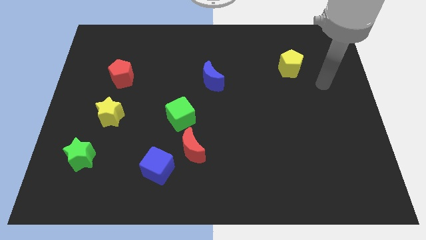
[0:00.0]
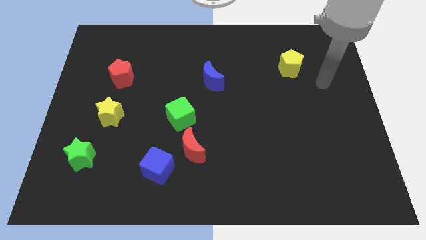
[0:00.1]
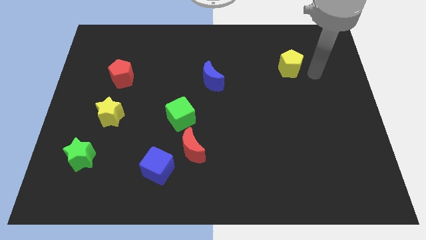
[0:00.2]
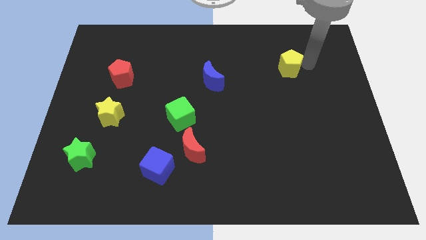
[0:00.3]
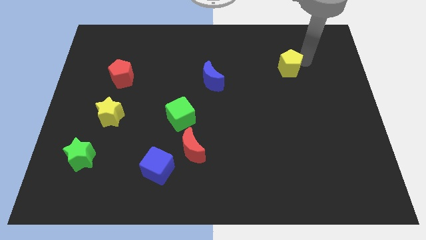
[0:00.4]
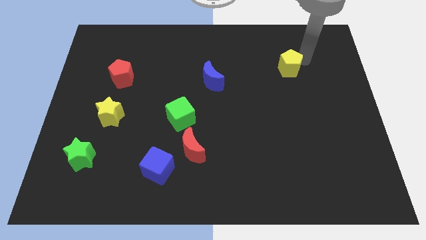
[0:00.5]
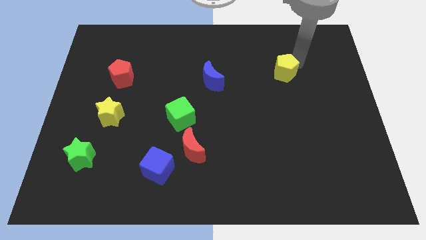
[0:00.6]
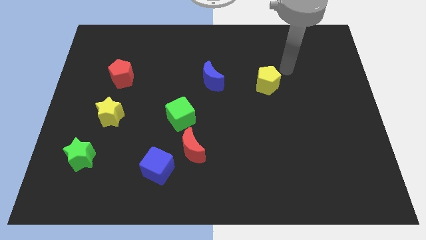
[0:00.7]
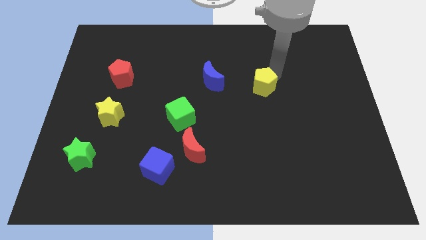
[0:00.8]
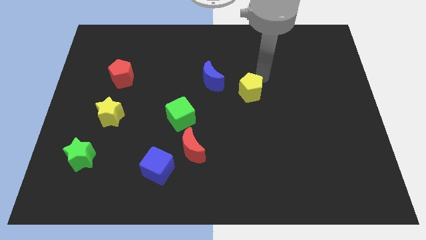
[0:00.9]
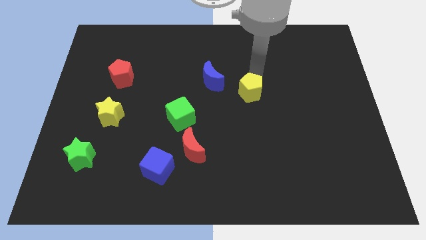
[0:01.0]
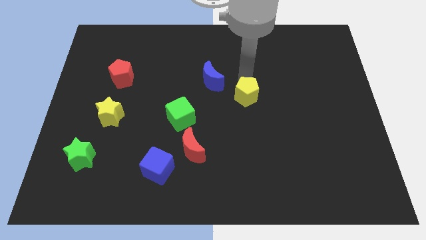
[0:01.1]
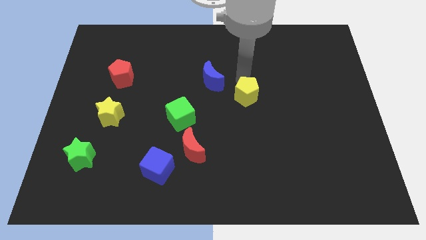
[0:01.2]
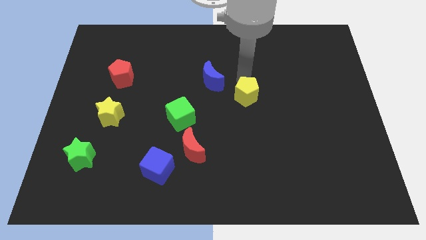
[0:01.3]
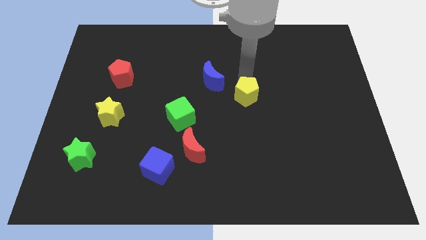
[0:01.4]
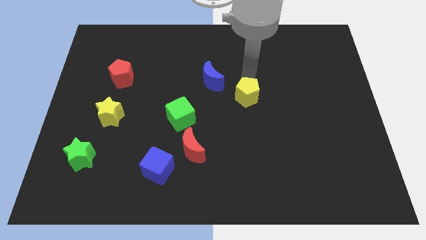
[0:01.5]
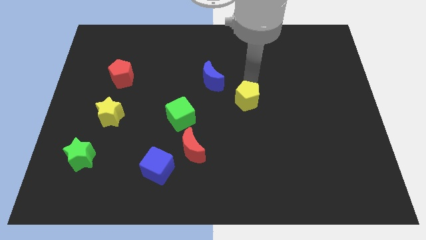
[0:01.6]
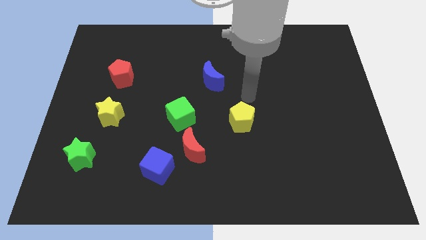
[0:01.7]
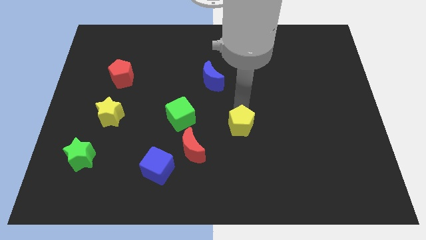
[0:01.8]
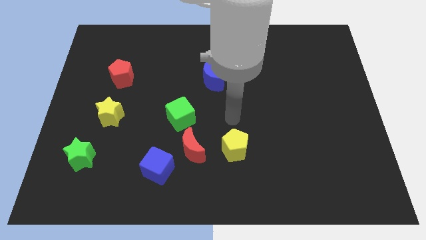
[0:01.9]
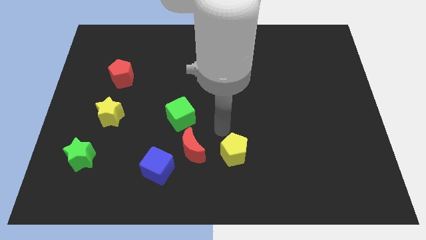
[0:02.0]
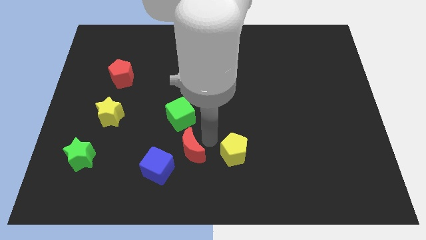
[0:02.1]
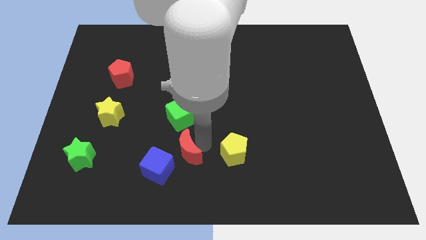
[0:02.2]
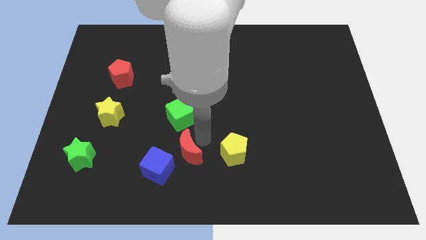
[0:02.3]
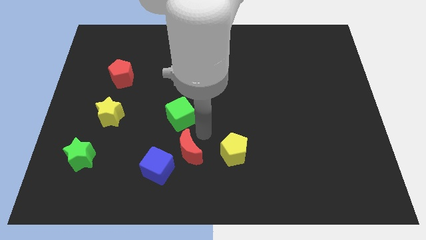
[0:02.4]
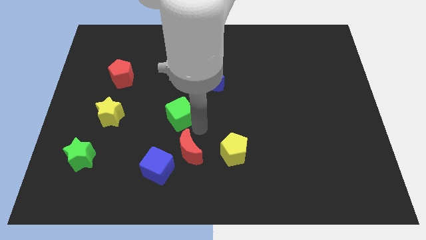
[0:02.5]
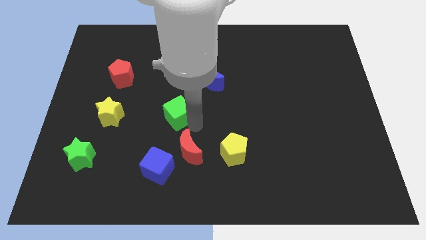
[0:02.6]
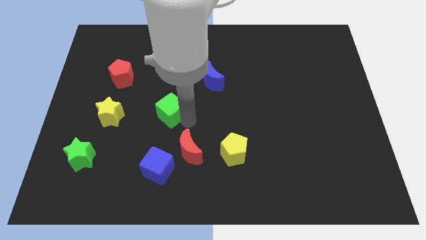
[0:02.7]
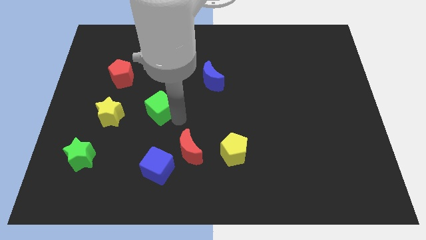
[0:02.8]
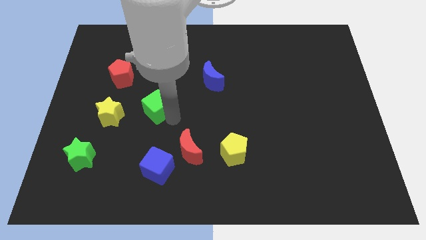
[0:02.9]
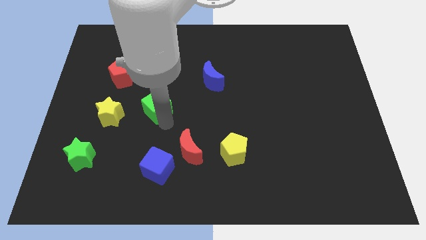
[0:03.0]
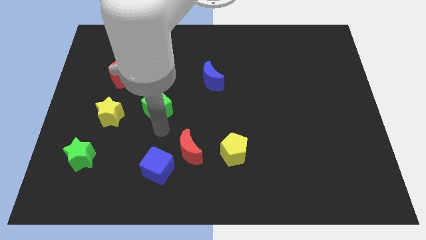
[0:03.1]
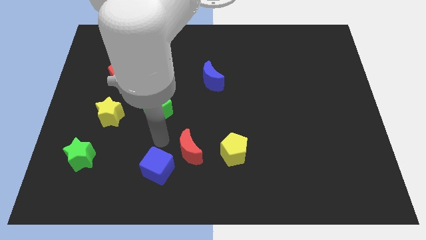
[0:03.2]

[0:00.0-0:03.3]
move yellow pentagon and green cube away from the red moon

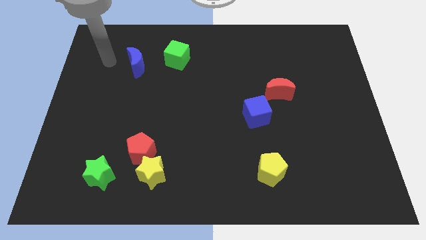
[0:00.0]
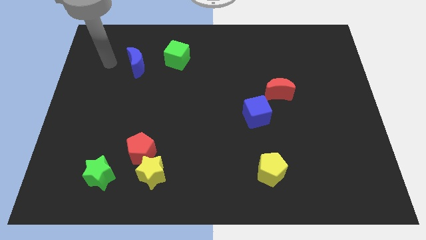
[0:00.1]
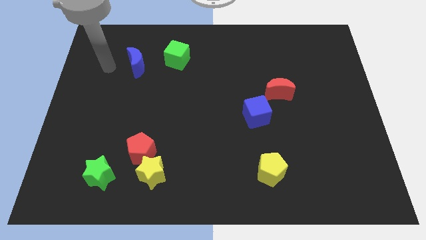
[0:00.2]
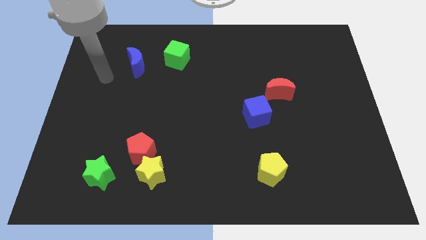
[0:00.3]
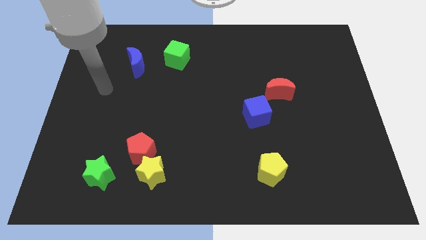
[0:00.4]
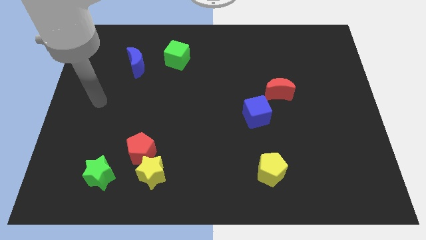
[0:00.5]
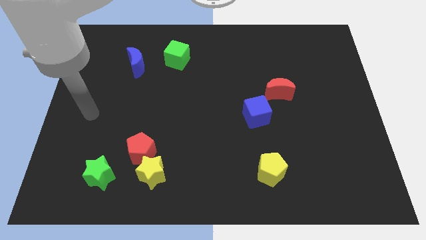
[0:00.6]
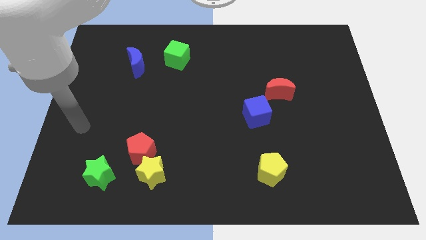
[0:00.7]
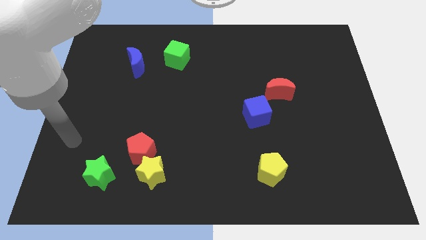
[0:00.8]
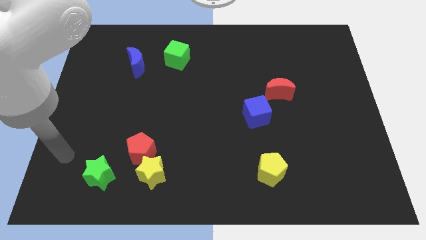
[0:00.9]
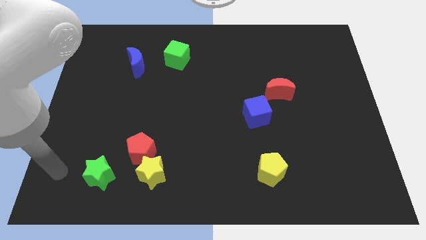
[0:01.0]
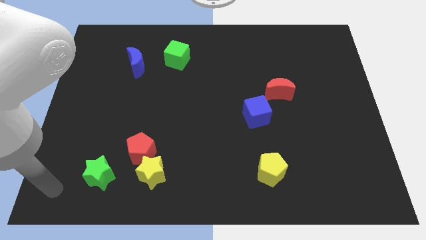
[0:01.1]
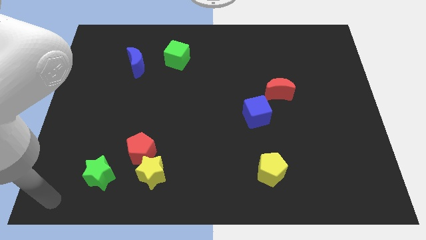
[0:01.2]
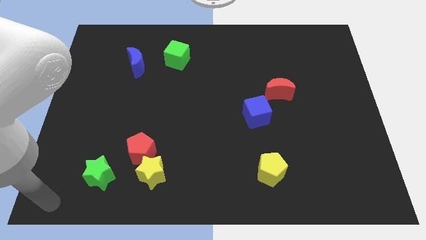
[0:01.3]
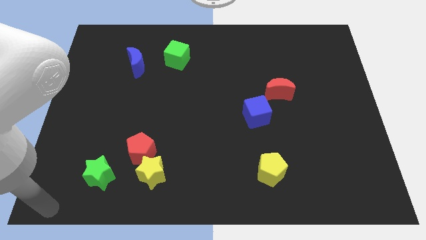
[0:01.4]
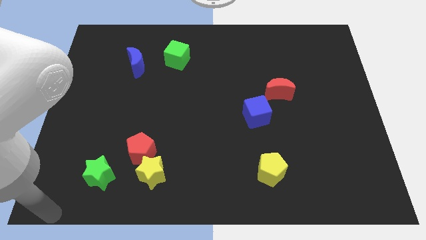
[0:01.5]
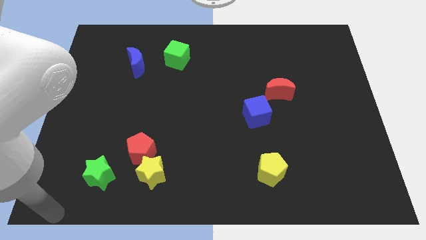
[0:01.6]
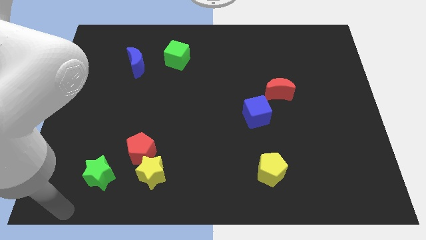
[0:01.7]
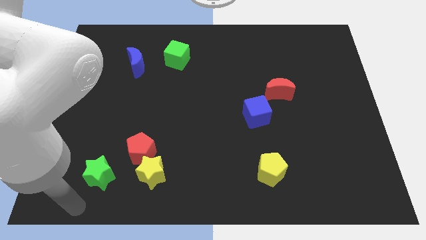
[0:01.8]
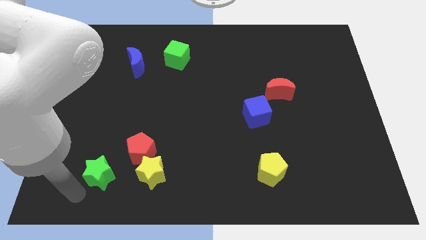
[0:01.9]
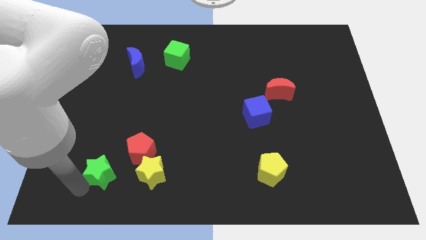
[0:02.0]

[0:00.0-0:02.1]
place your arm to the bottom of the green star

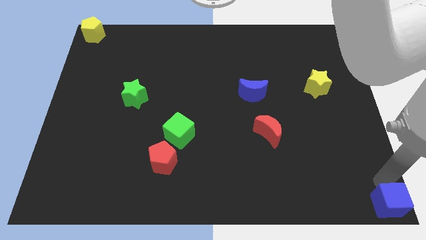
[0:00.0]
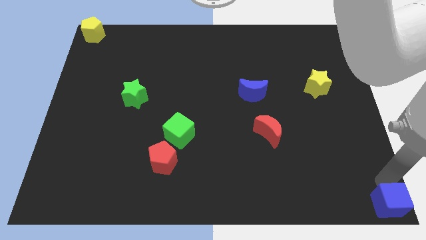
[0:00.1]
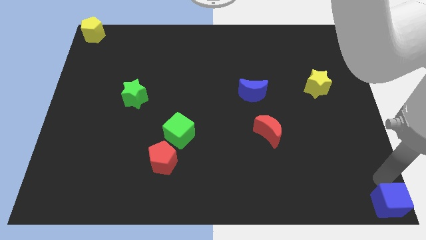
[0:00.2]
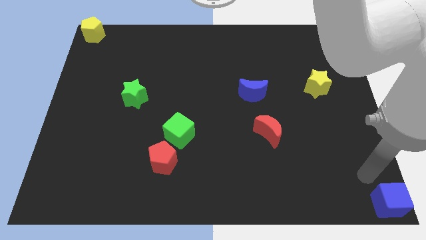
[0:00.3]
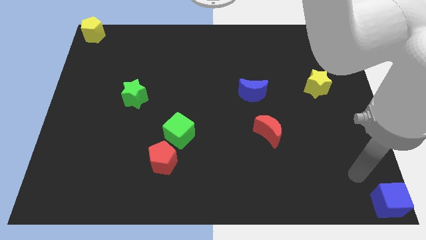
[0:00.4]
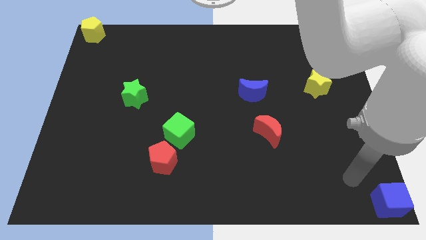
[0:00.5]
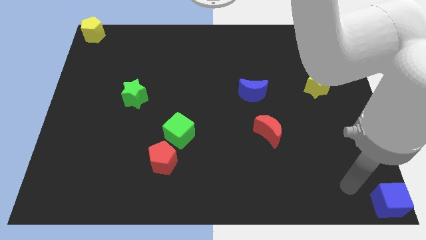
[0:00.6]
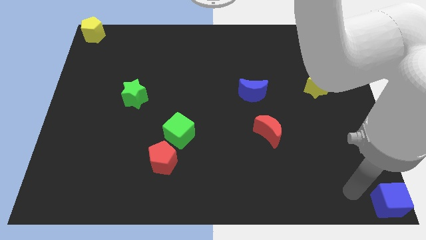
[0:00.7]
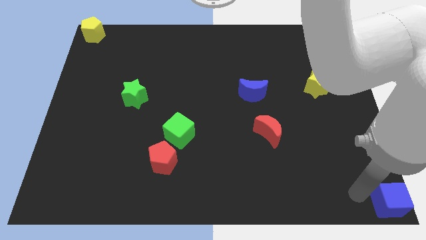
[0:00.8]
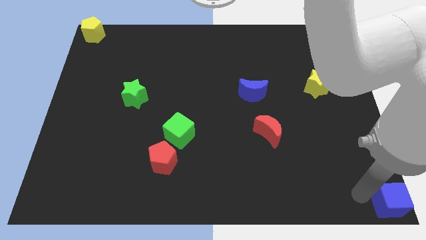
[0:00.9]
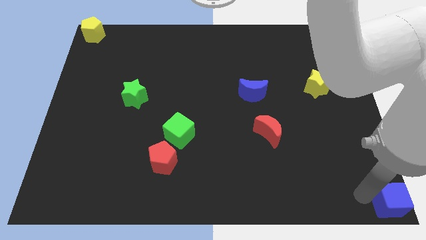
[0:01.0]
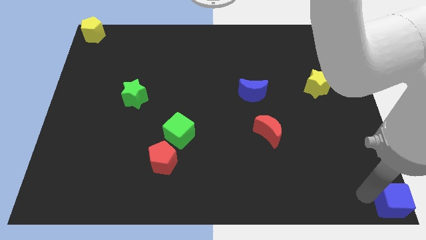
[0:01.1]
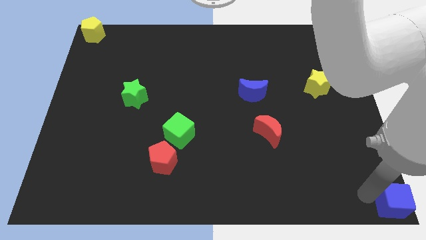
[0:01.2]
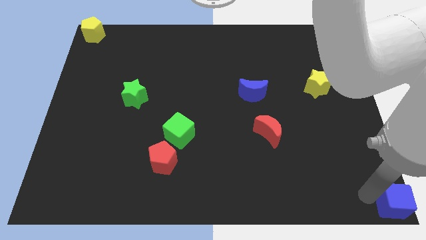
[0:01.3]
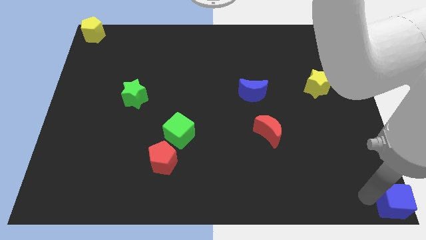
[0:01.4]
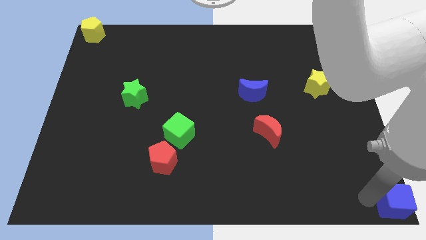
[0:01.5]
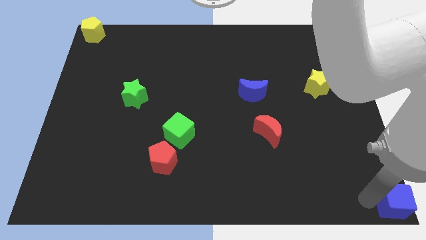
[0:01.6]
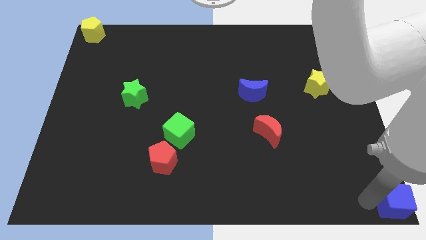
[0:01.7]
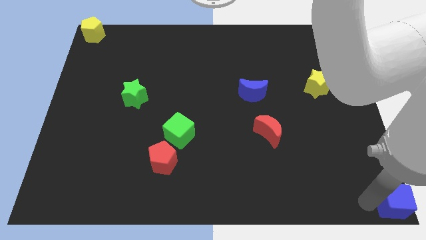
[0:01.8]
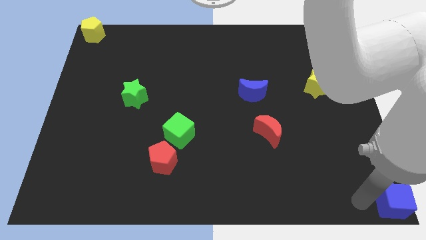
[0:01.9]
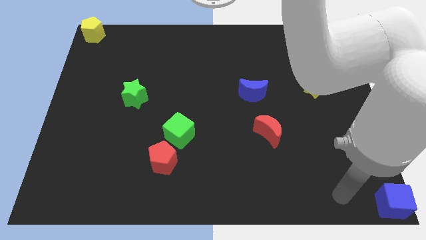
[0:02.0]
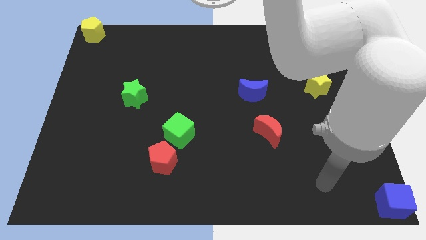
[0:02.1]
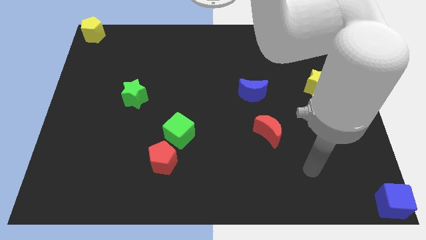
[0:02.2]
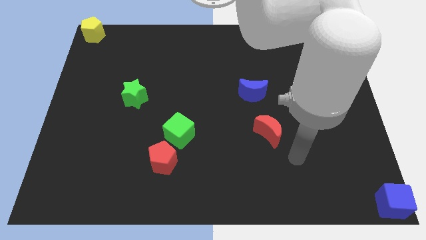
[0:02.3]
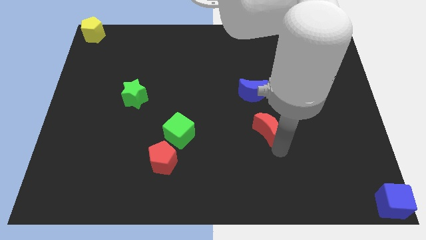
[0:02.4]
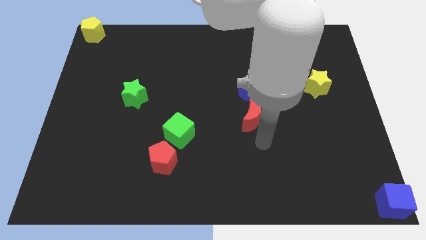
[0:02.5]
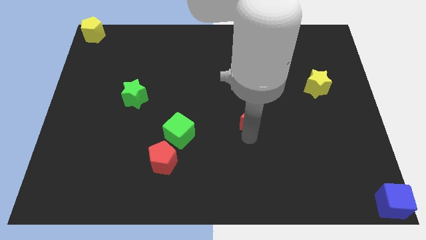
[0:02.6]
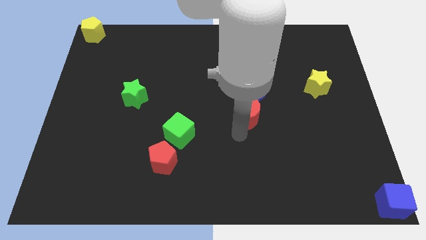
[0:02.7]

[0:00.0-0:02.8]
move your arm away from blue cube

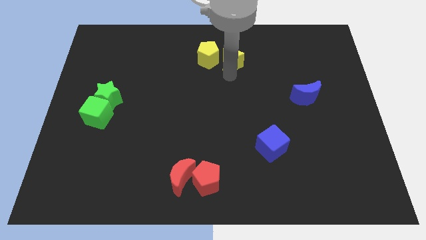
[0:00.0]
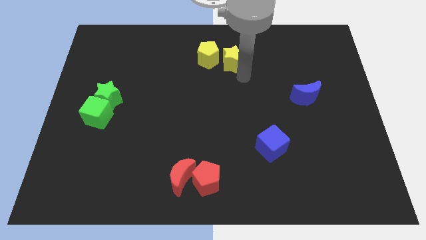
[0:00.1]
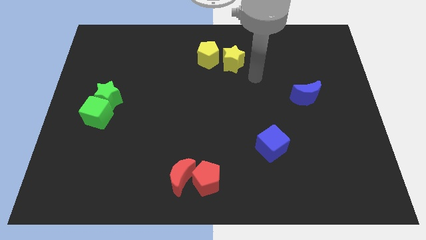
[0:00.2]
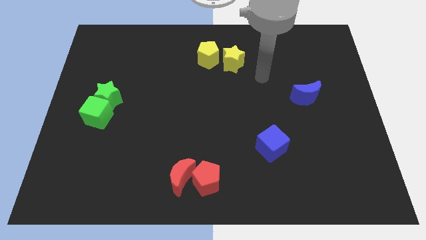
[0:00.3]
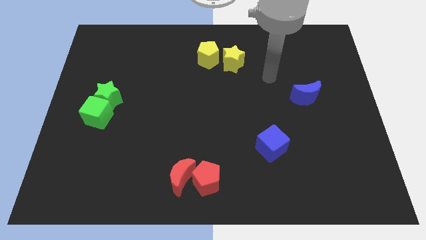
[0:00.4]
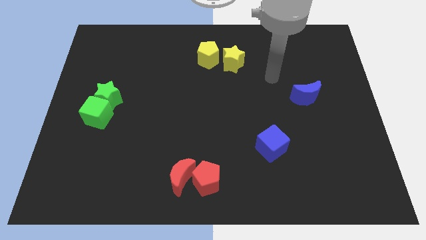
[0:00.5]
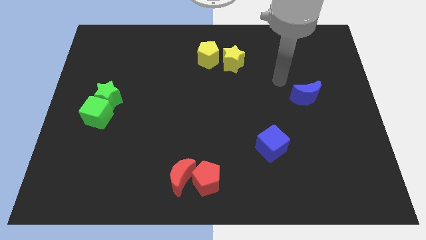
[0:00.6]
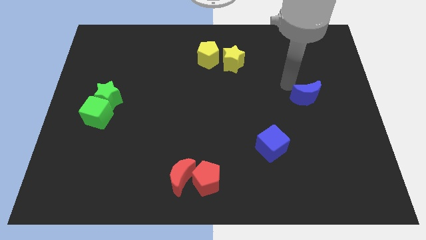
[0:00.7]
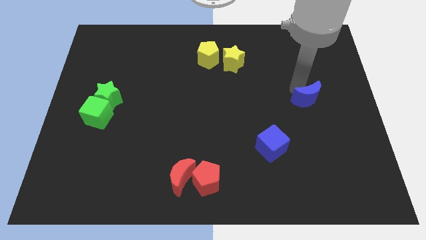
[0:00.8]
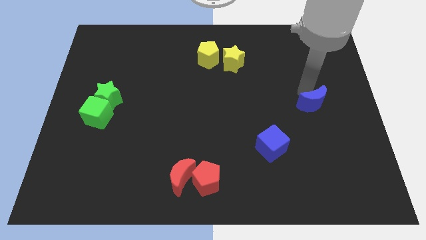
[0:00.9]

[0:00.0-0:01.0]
move your arm away from the yellow star
